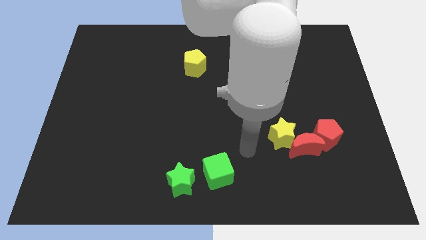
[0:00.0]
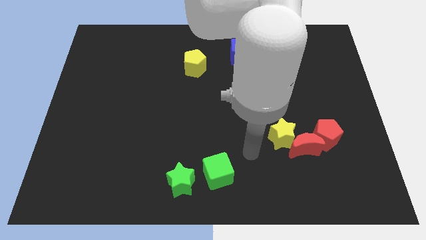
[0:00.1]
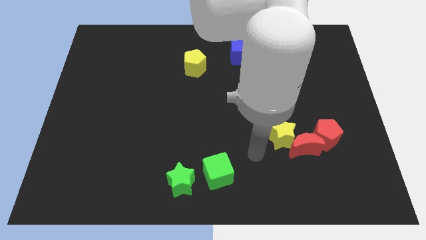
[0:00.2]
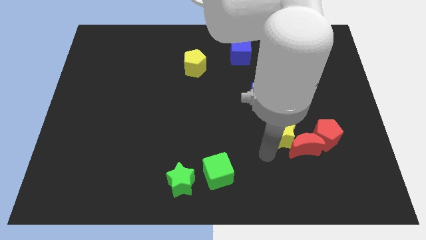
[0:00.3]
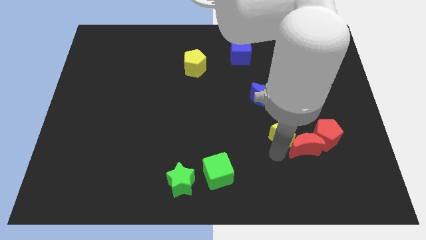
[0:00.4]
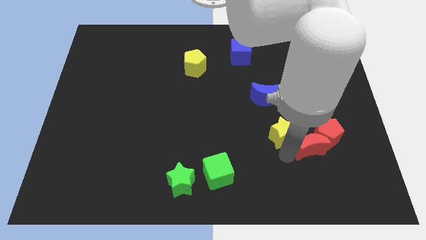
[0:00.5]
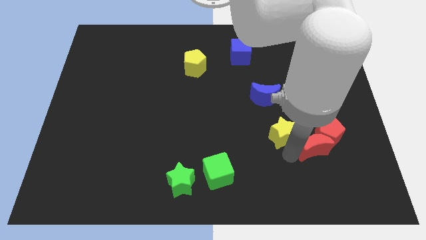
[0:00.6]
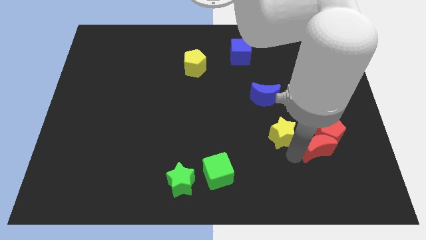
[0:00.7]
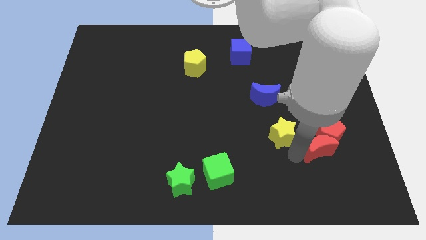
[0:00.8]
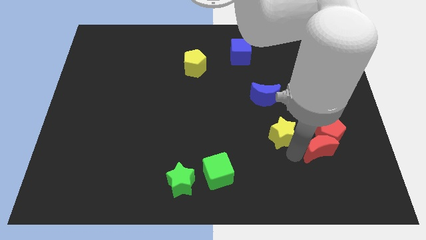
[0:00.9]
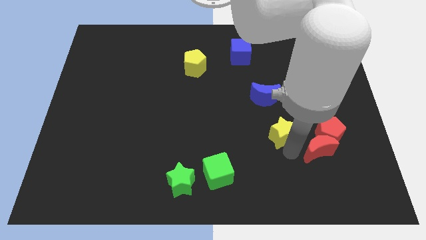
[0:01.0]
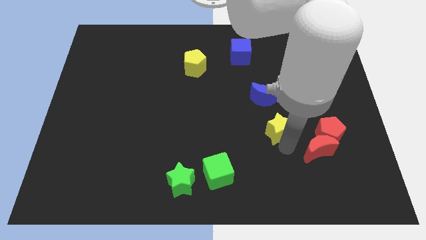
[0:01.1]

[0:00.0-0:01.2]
push the red moon into the red pentagon

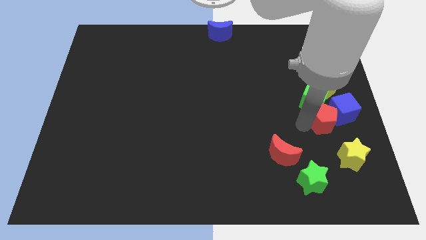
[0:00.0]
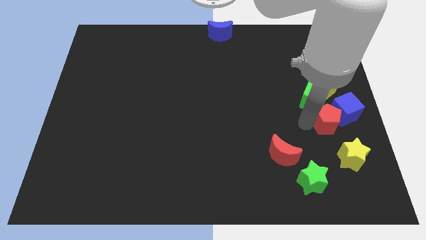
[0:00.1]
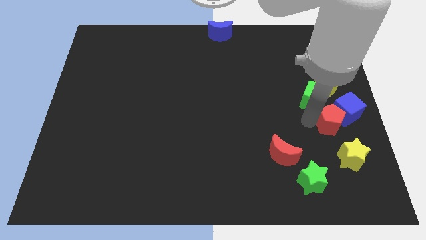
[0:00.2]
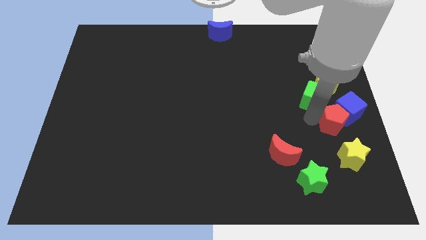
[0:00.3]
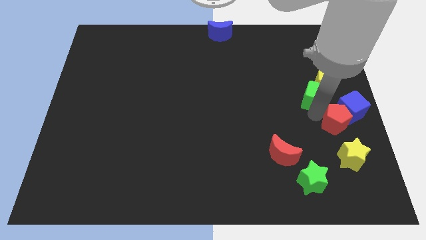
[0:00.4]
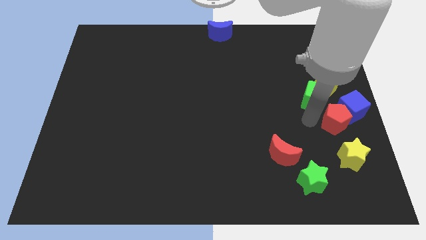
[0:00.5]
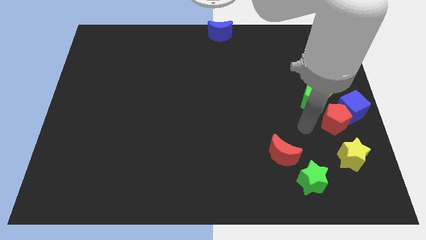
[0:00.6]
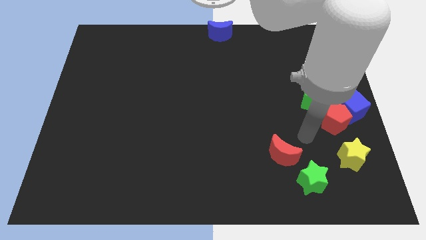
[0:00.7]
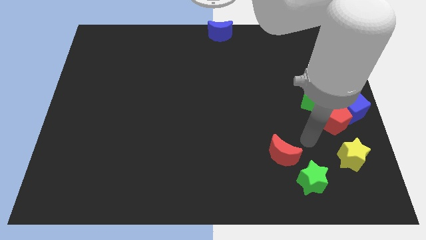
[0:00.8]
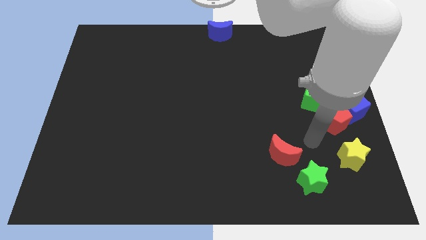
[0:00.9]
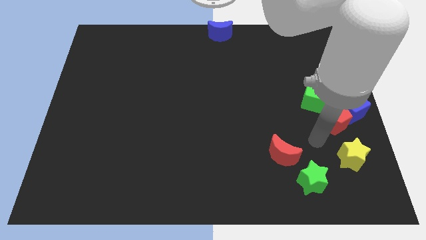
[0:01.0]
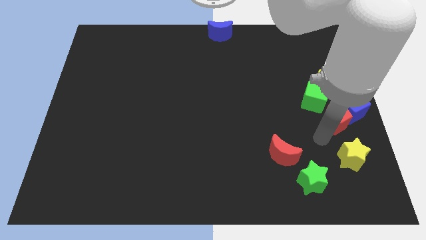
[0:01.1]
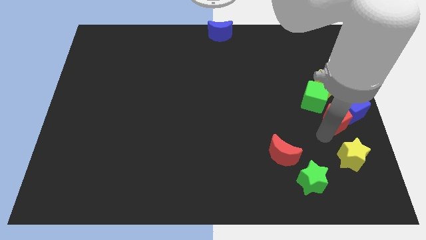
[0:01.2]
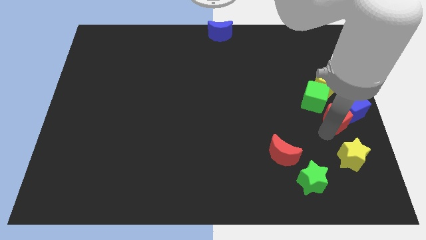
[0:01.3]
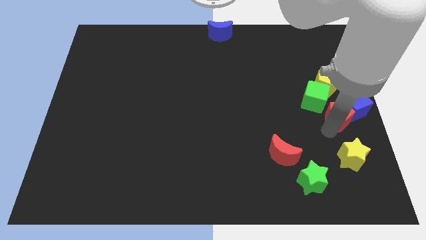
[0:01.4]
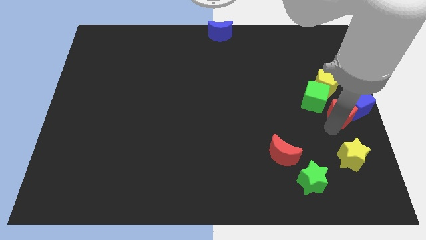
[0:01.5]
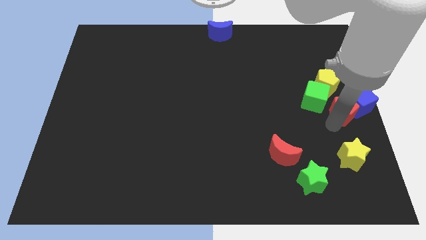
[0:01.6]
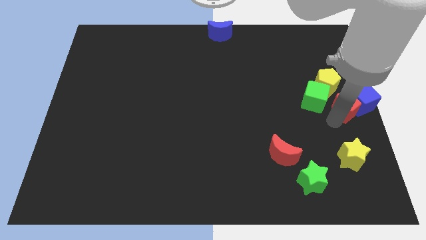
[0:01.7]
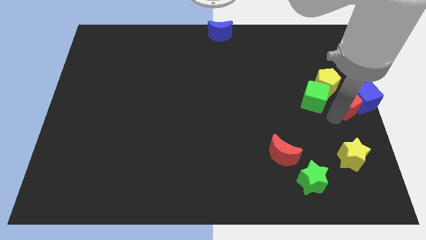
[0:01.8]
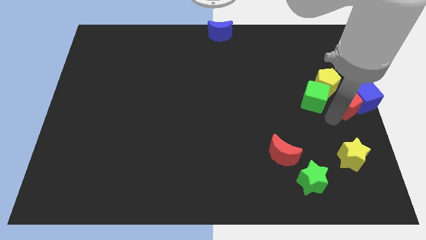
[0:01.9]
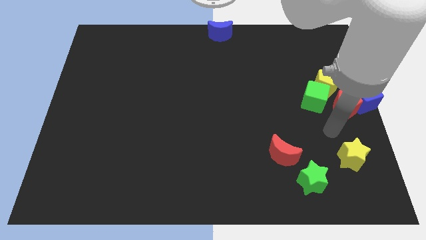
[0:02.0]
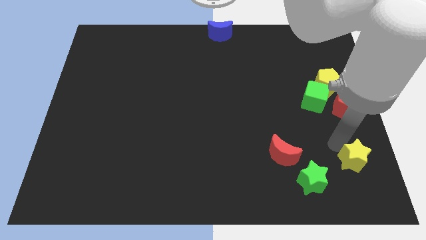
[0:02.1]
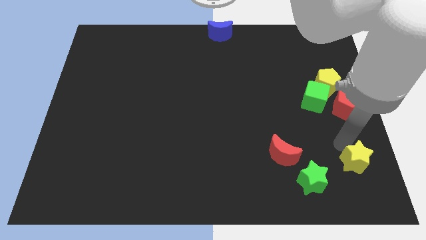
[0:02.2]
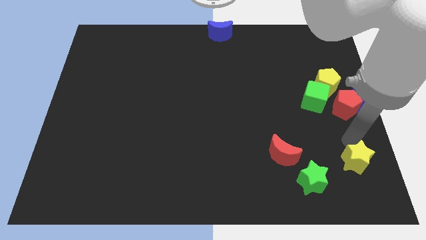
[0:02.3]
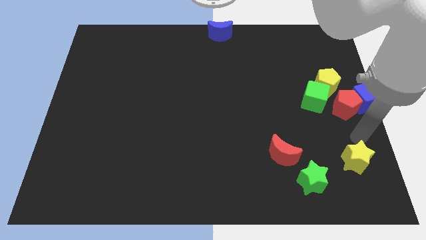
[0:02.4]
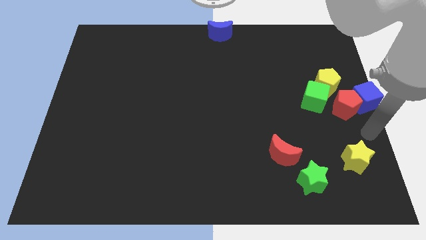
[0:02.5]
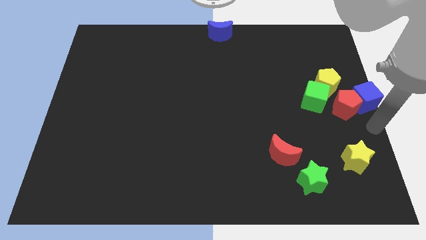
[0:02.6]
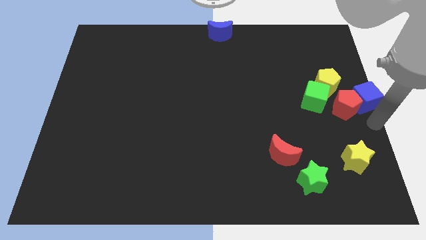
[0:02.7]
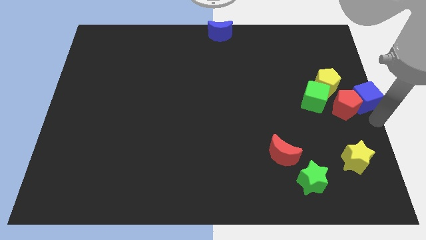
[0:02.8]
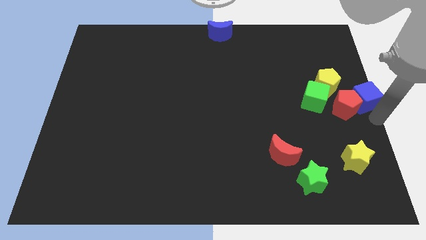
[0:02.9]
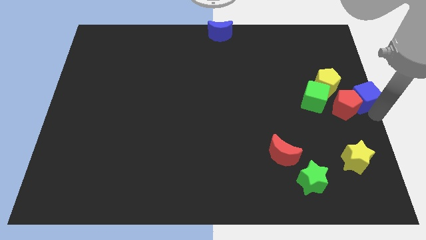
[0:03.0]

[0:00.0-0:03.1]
slide red pentagon and blue cube to the center right

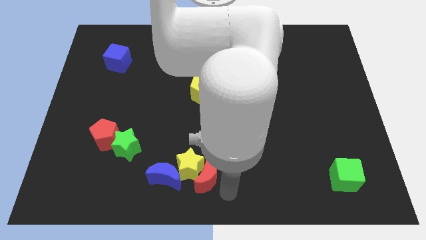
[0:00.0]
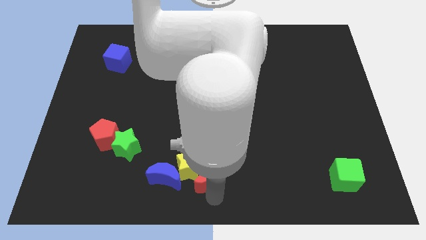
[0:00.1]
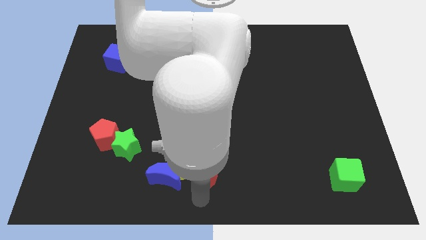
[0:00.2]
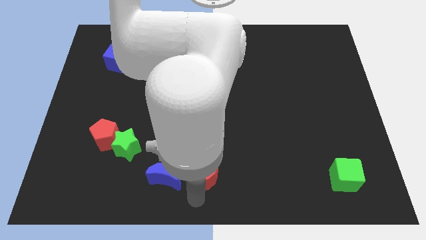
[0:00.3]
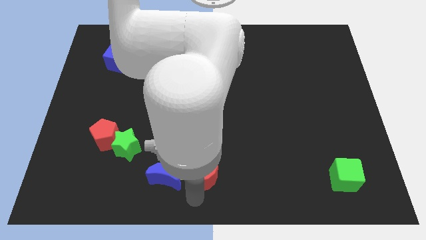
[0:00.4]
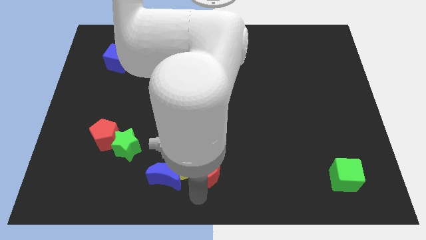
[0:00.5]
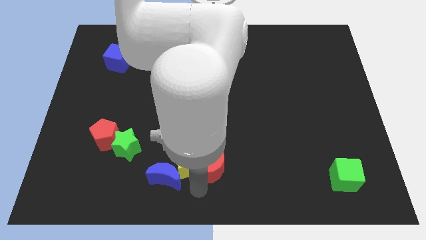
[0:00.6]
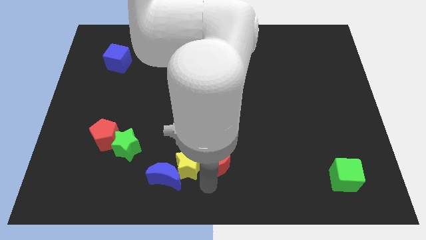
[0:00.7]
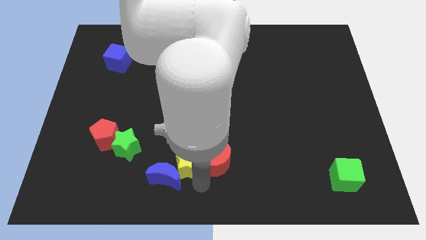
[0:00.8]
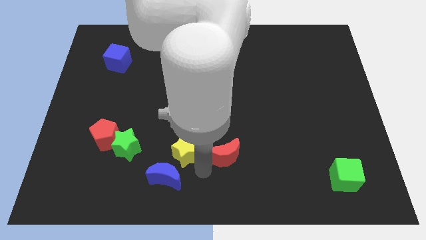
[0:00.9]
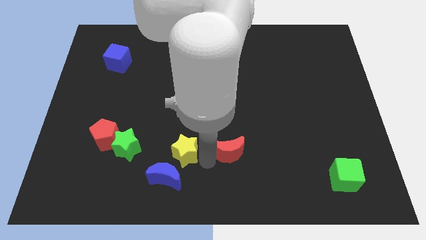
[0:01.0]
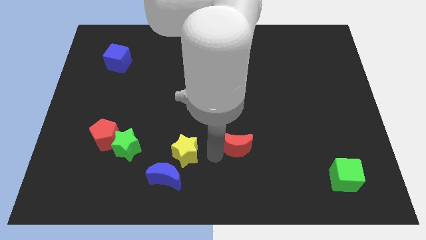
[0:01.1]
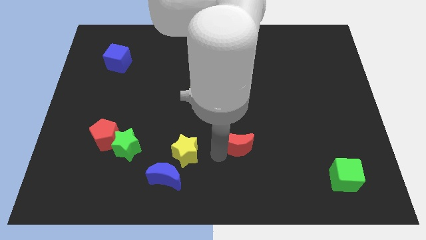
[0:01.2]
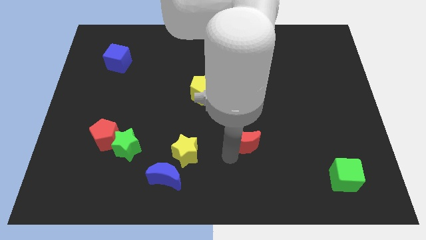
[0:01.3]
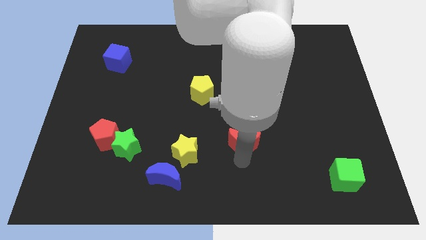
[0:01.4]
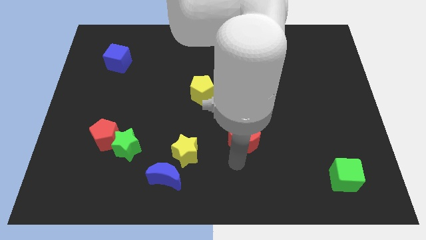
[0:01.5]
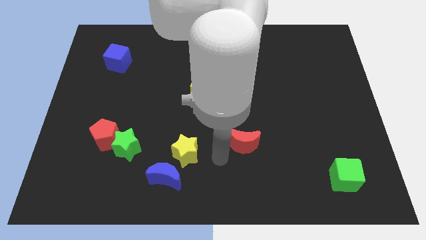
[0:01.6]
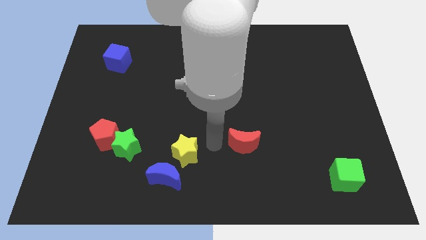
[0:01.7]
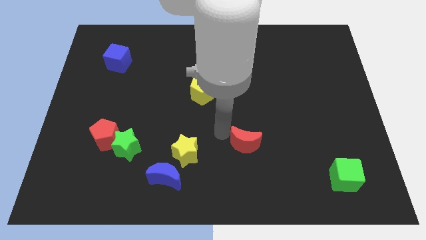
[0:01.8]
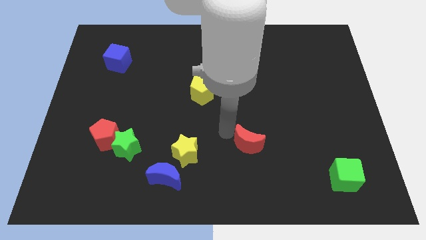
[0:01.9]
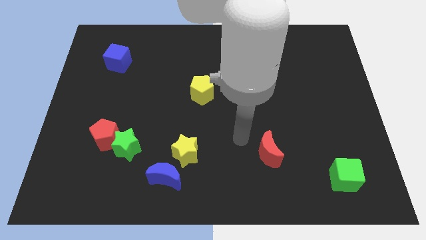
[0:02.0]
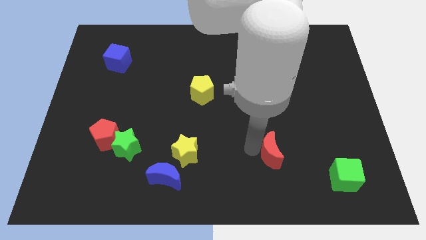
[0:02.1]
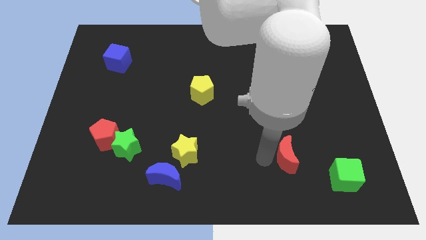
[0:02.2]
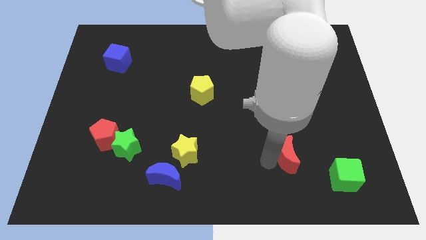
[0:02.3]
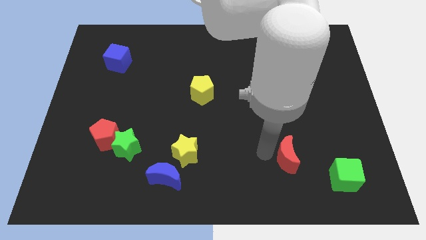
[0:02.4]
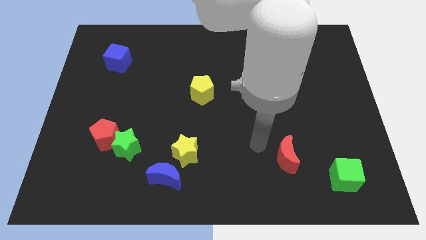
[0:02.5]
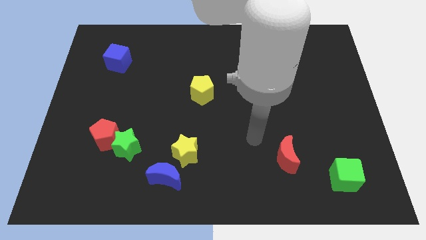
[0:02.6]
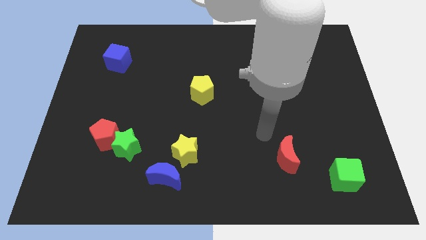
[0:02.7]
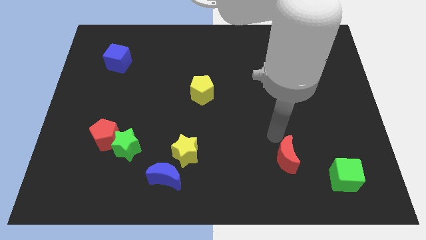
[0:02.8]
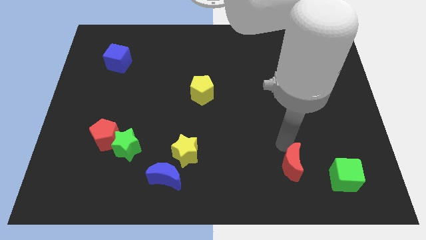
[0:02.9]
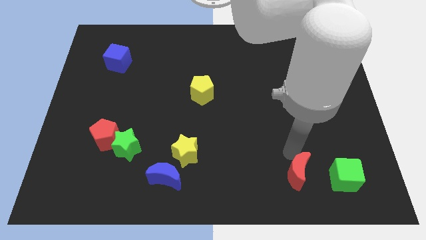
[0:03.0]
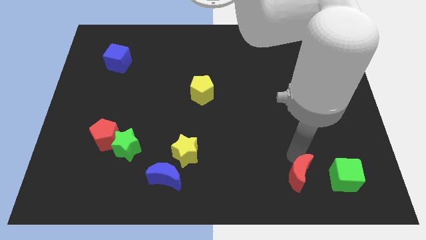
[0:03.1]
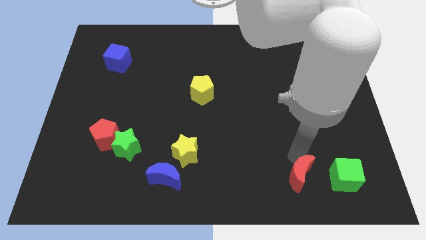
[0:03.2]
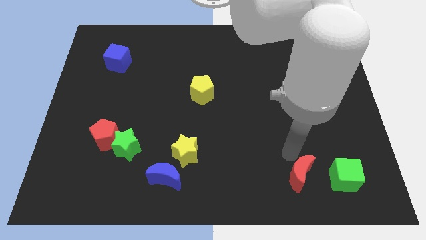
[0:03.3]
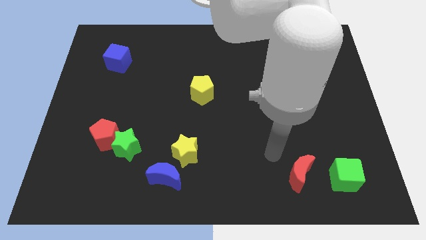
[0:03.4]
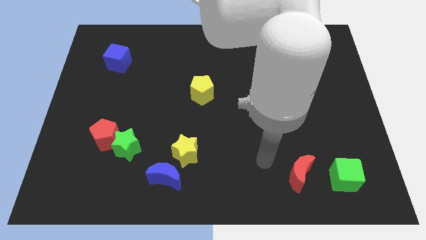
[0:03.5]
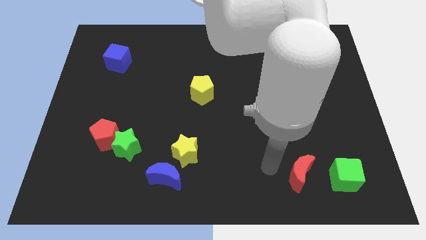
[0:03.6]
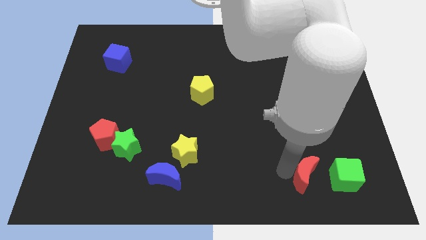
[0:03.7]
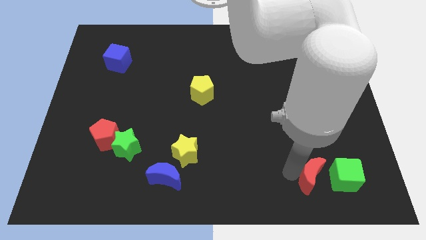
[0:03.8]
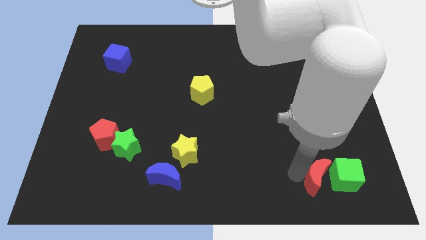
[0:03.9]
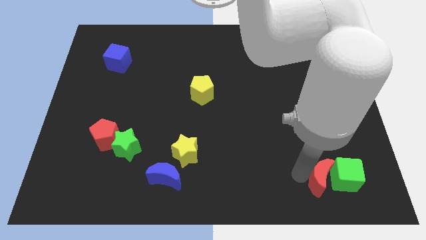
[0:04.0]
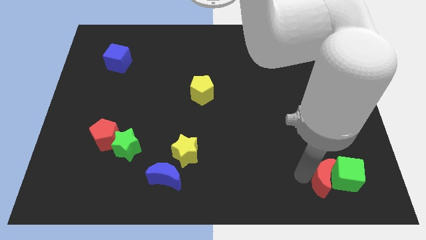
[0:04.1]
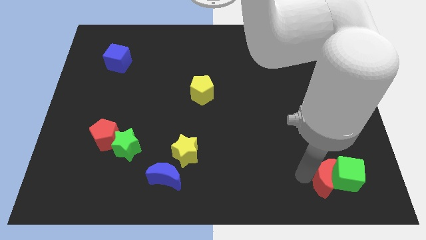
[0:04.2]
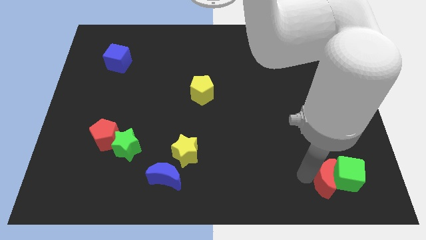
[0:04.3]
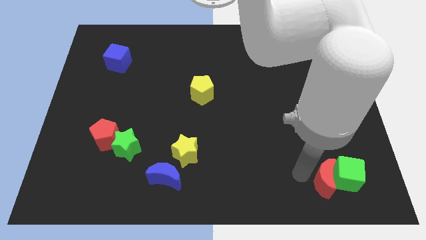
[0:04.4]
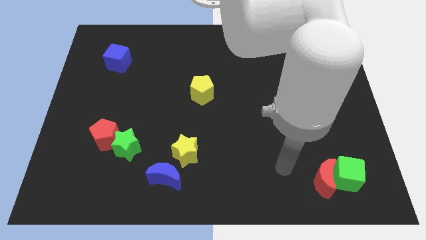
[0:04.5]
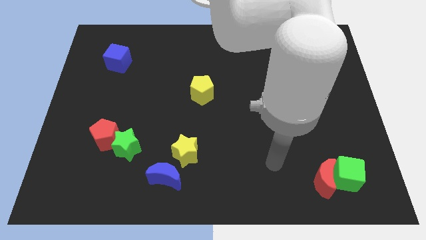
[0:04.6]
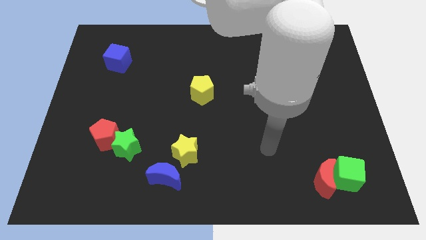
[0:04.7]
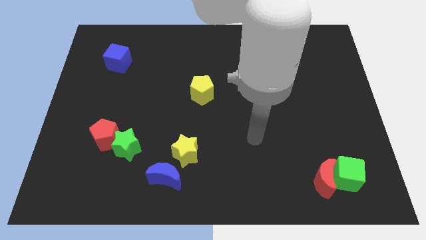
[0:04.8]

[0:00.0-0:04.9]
move red crescent to the left of green cube
